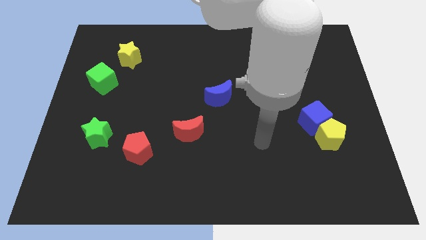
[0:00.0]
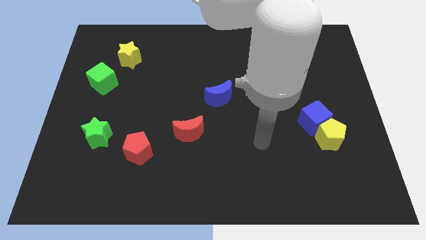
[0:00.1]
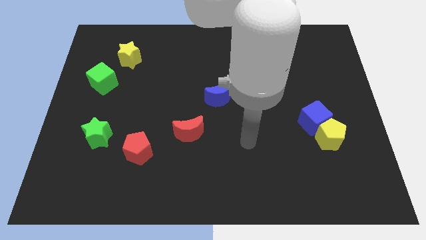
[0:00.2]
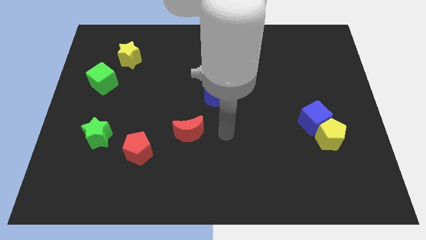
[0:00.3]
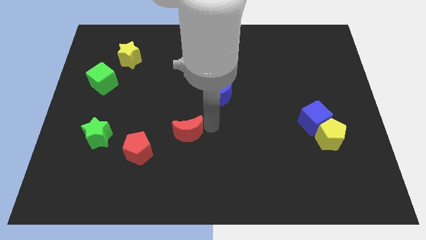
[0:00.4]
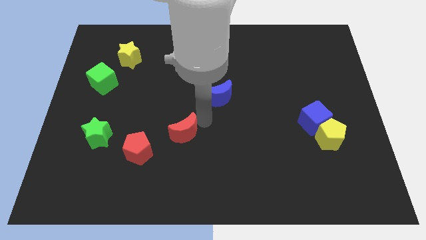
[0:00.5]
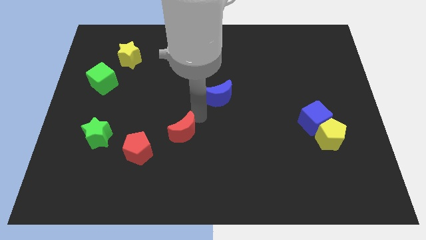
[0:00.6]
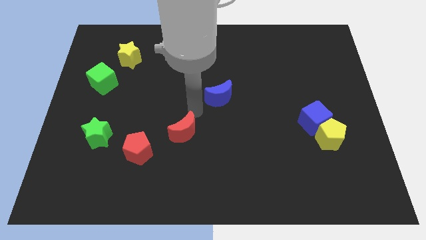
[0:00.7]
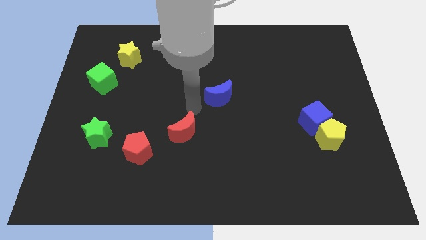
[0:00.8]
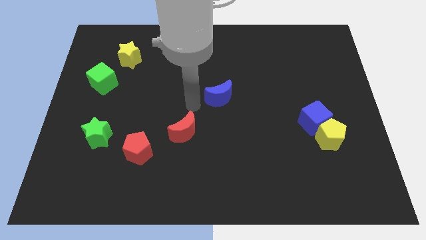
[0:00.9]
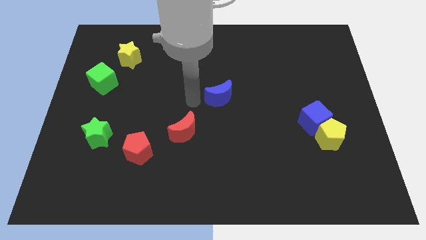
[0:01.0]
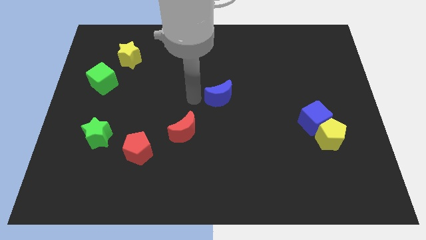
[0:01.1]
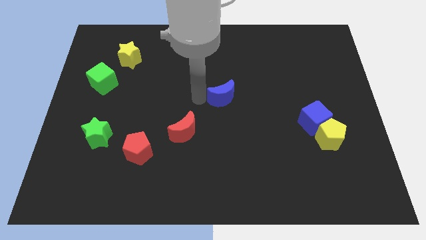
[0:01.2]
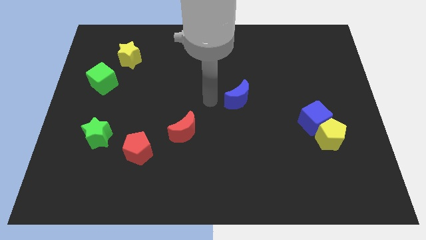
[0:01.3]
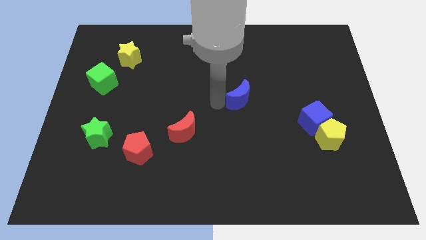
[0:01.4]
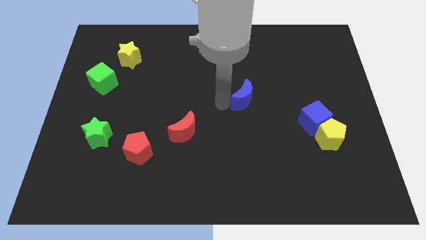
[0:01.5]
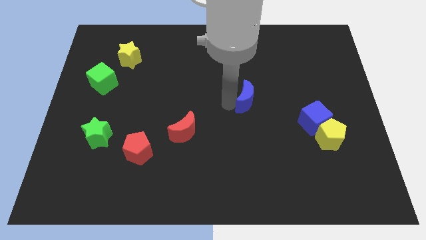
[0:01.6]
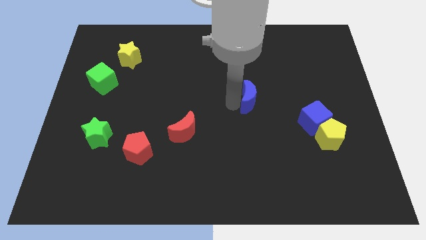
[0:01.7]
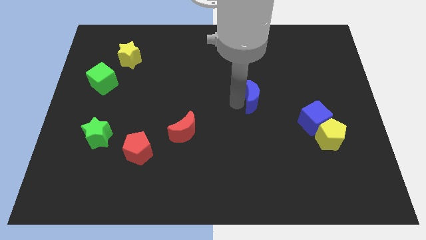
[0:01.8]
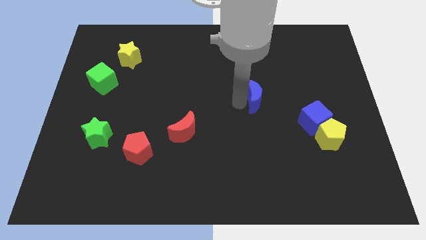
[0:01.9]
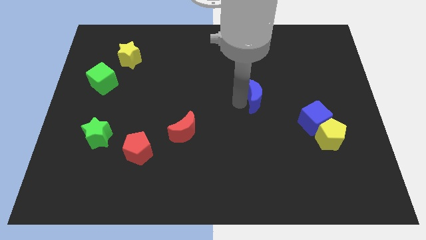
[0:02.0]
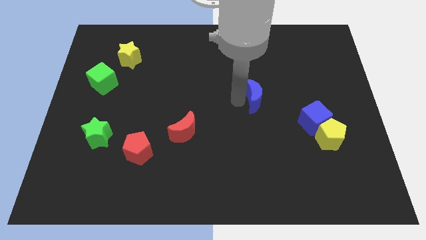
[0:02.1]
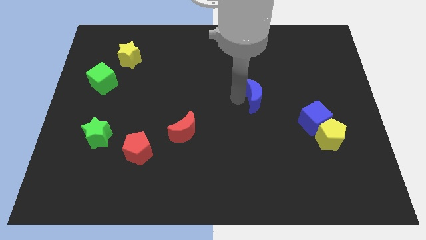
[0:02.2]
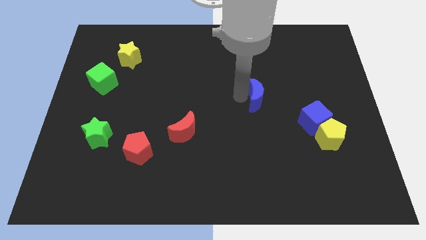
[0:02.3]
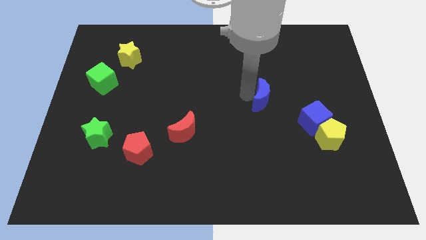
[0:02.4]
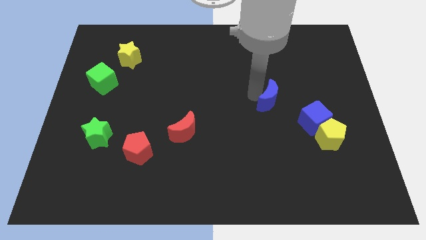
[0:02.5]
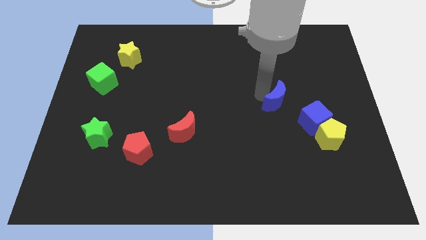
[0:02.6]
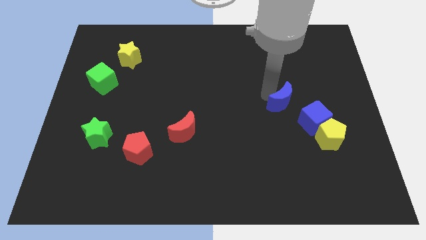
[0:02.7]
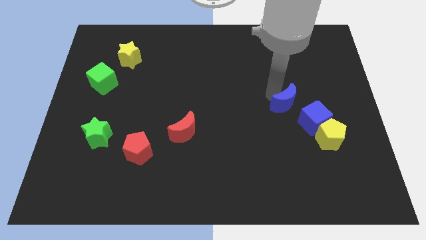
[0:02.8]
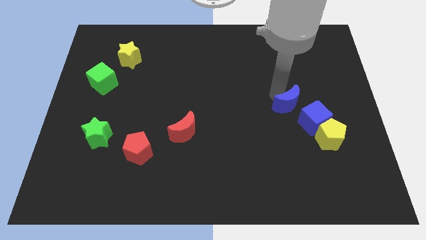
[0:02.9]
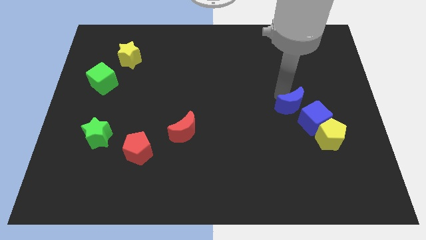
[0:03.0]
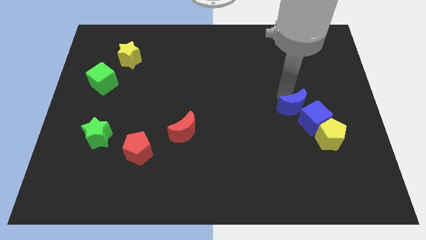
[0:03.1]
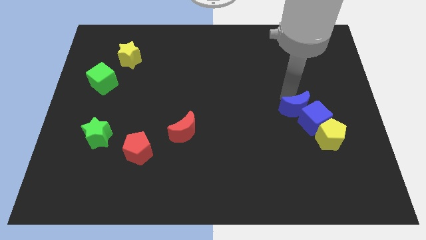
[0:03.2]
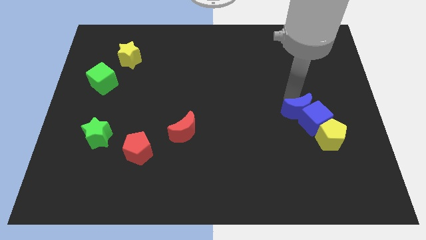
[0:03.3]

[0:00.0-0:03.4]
move the blue moon close to the blue cube

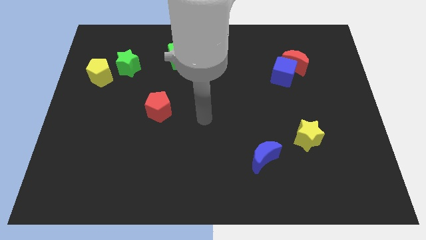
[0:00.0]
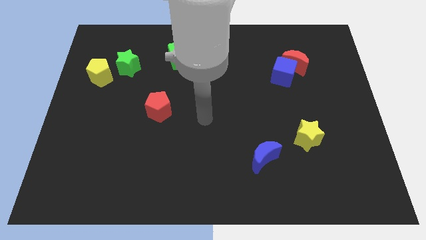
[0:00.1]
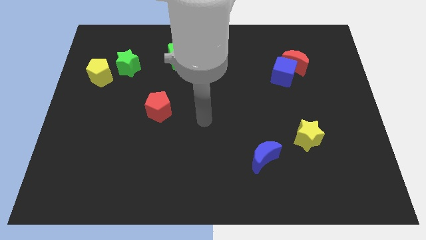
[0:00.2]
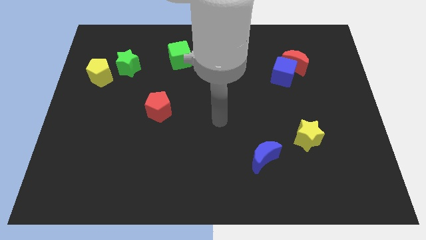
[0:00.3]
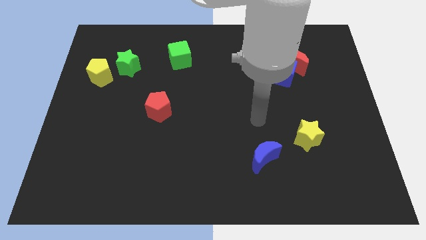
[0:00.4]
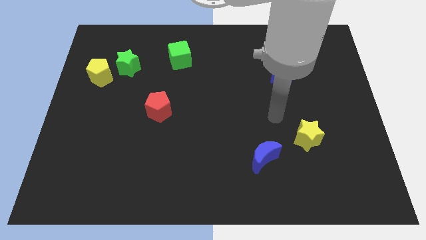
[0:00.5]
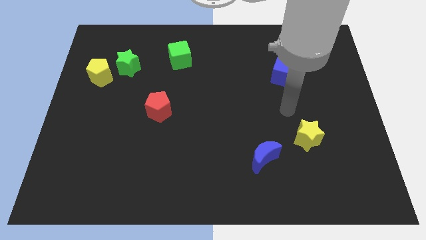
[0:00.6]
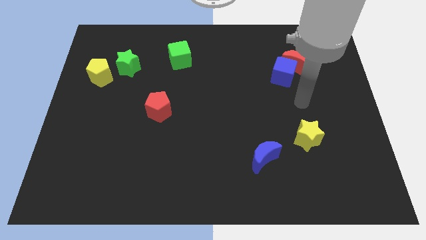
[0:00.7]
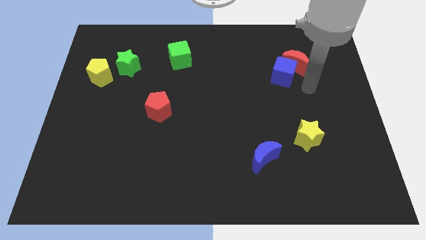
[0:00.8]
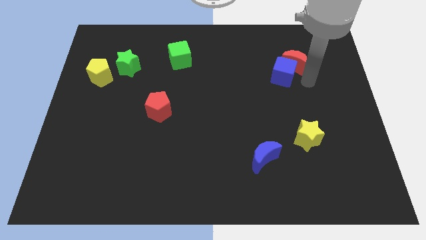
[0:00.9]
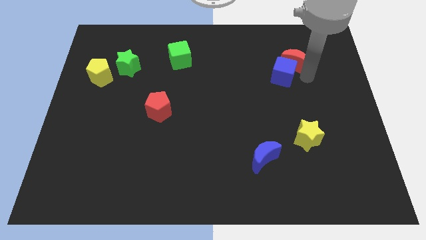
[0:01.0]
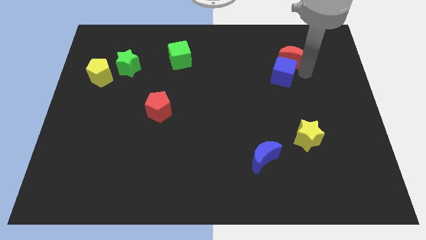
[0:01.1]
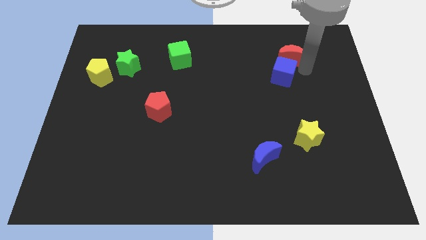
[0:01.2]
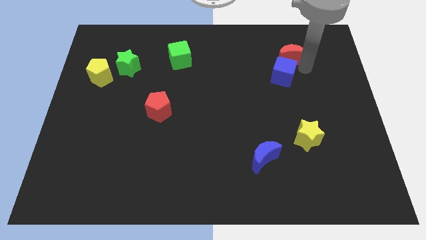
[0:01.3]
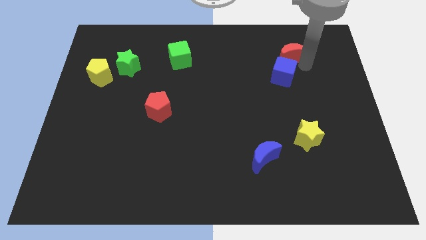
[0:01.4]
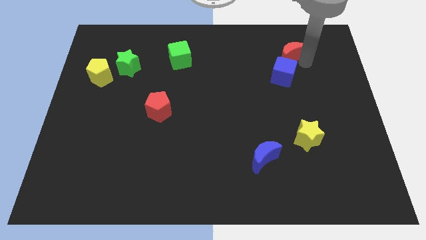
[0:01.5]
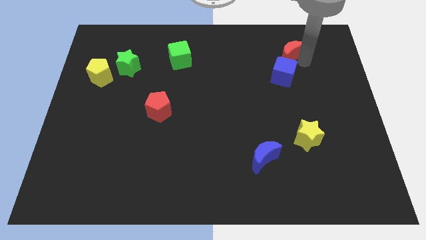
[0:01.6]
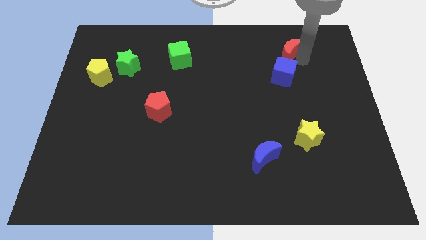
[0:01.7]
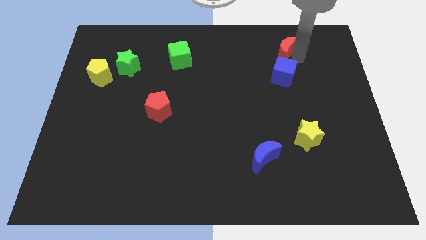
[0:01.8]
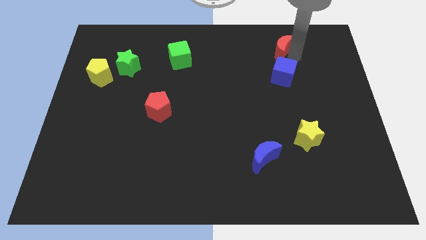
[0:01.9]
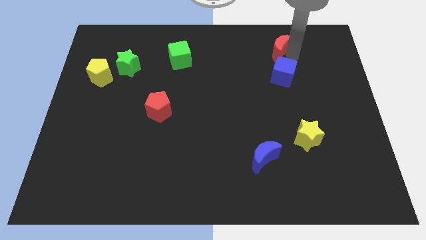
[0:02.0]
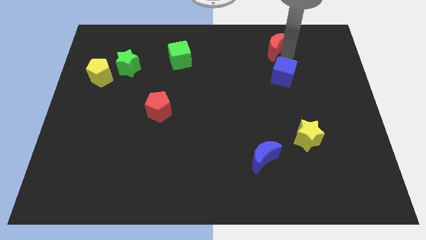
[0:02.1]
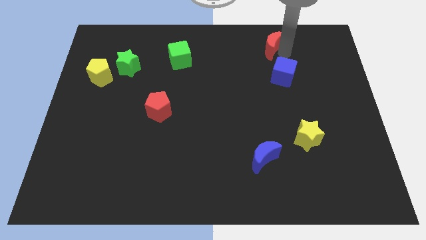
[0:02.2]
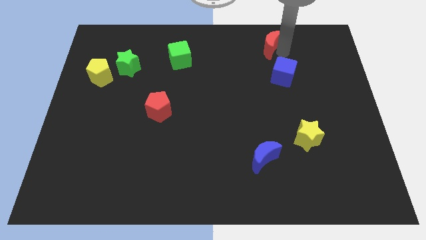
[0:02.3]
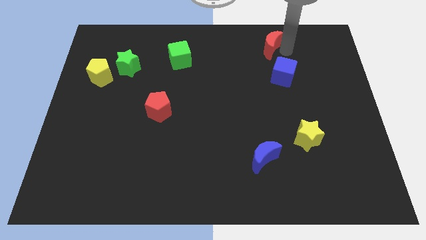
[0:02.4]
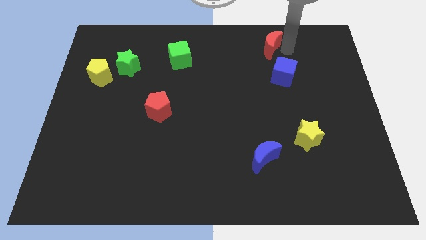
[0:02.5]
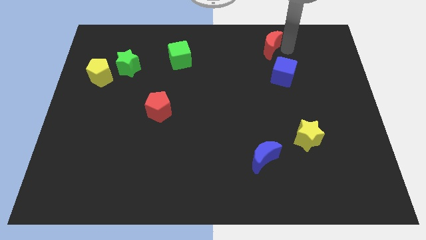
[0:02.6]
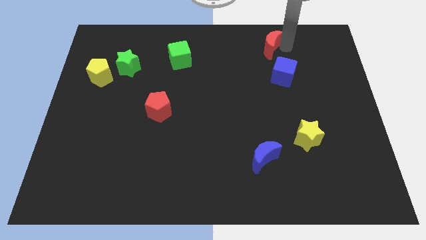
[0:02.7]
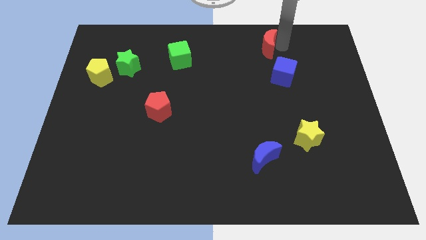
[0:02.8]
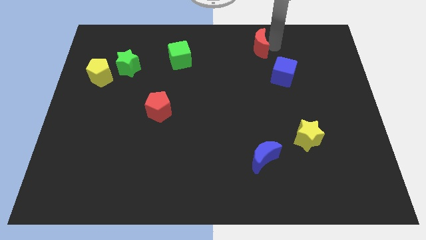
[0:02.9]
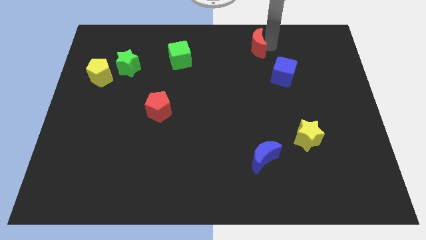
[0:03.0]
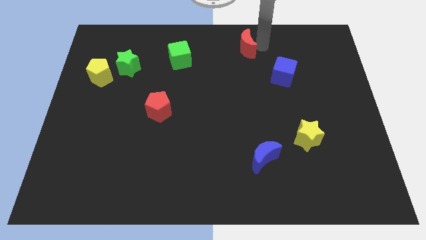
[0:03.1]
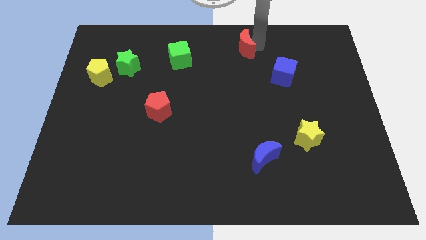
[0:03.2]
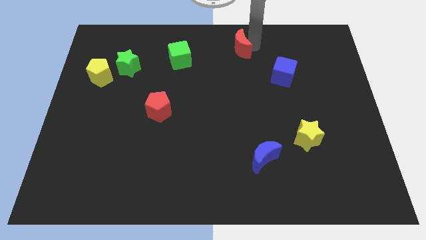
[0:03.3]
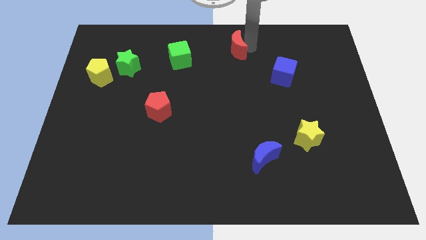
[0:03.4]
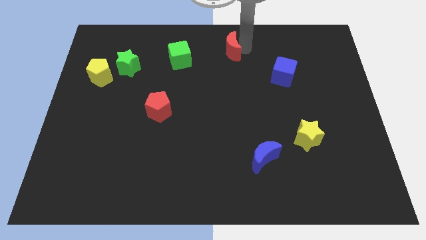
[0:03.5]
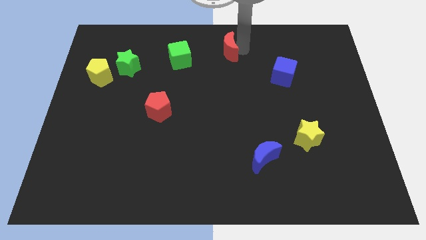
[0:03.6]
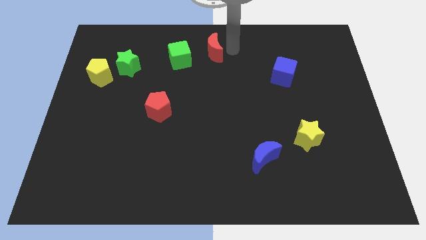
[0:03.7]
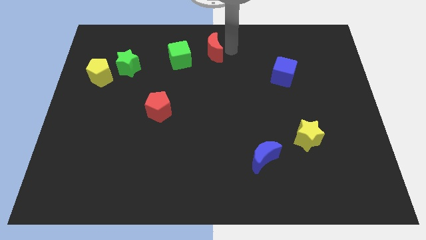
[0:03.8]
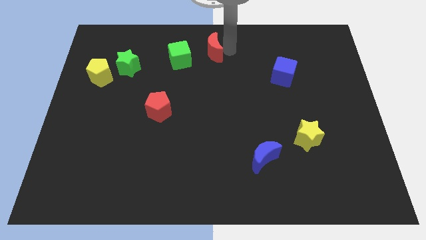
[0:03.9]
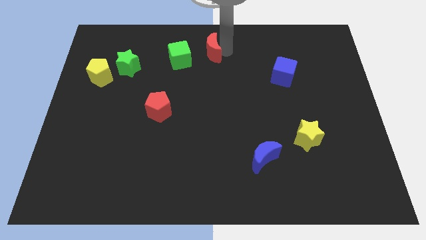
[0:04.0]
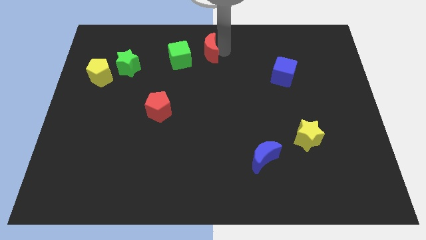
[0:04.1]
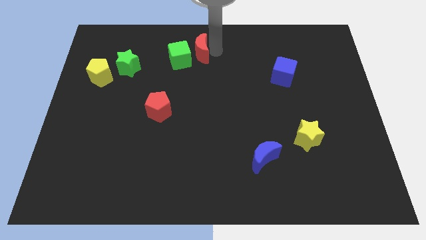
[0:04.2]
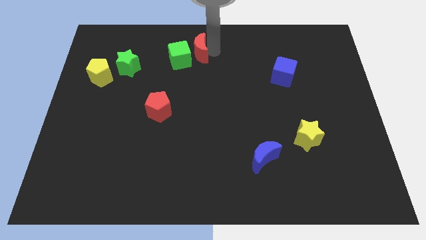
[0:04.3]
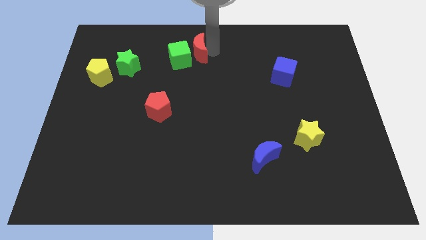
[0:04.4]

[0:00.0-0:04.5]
move the red moon next to the green cube

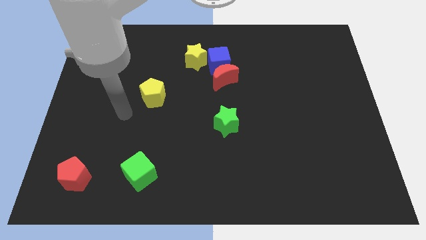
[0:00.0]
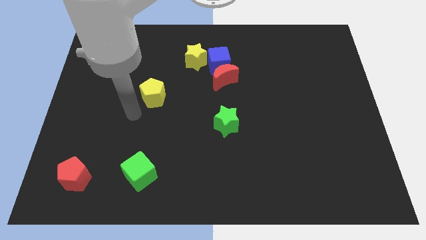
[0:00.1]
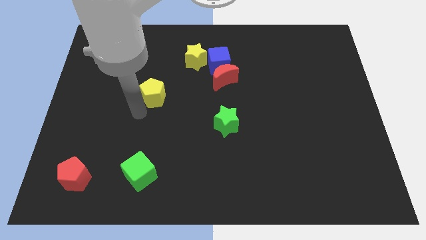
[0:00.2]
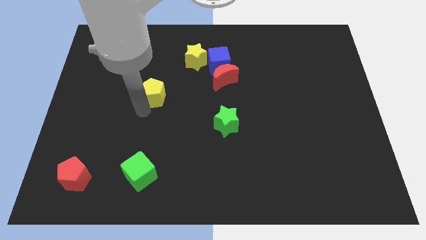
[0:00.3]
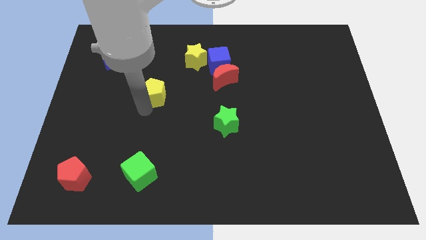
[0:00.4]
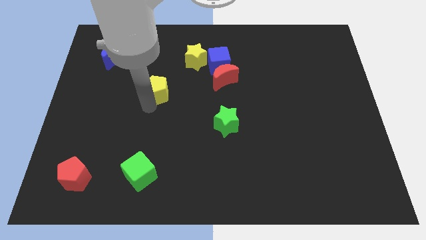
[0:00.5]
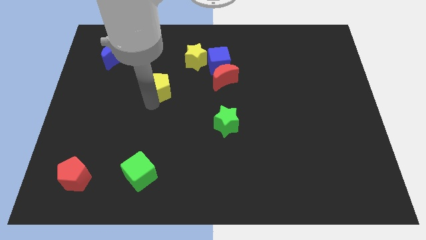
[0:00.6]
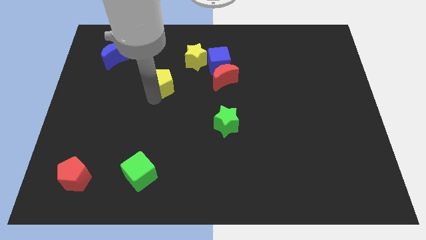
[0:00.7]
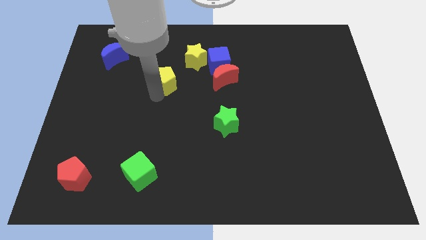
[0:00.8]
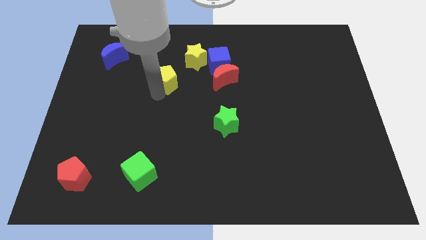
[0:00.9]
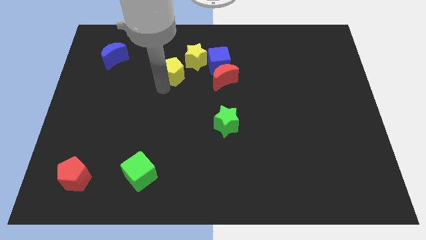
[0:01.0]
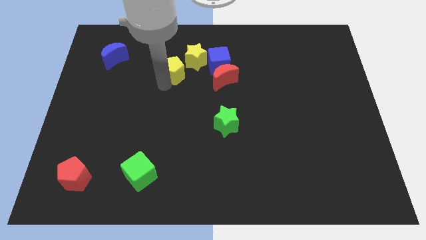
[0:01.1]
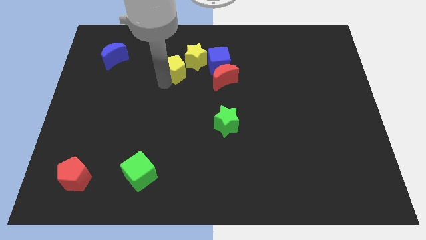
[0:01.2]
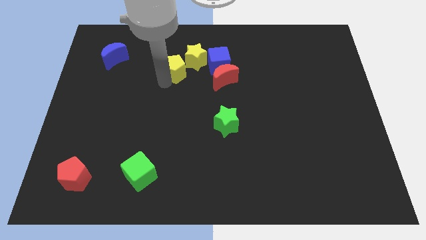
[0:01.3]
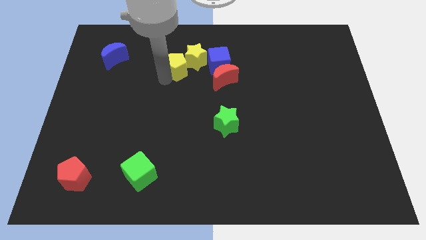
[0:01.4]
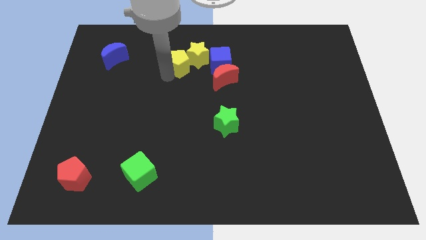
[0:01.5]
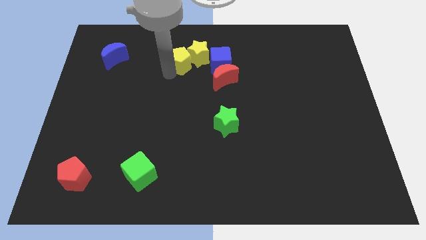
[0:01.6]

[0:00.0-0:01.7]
slide the yellow pentagon close to the yellow star
